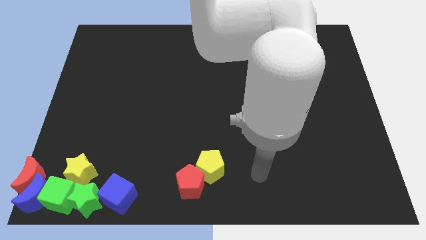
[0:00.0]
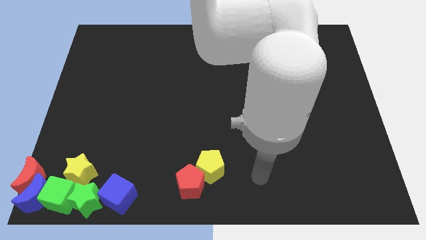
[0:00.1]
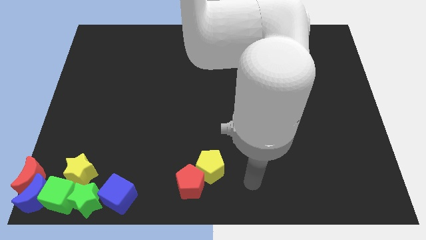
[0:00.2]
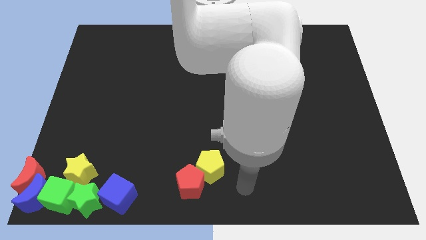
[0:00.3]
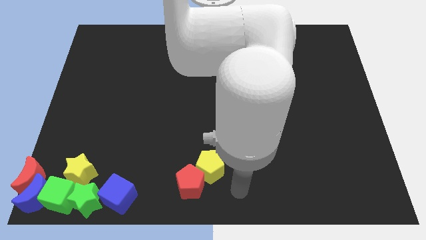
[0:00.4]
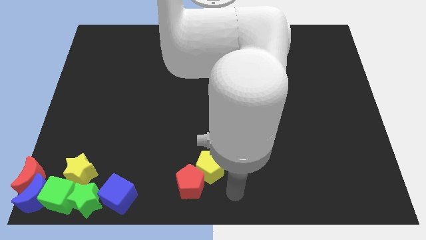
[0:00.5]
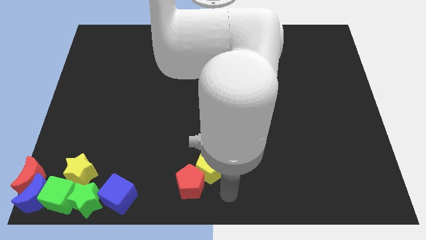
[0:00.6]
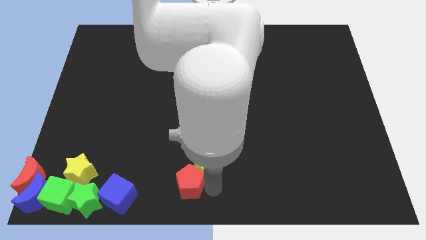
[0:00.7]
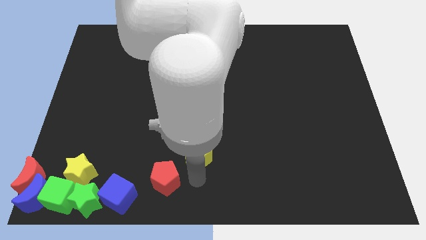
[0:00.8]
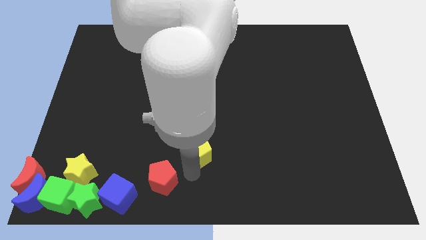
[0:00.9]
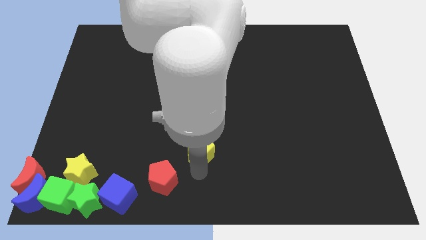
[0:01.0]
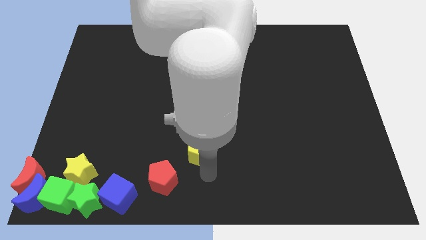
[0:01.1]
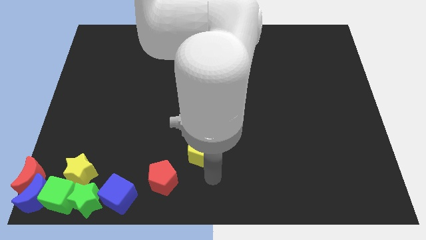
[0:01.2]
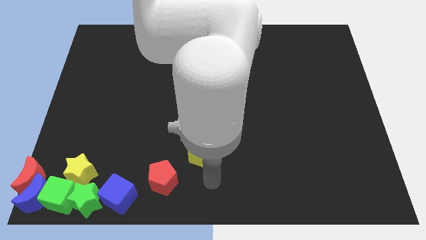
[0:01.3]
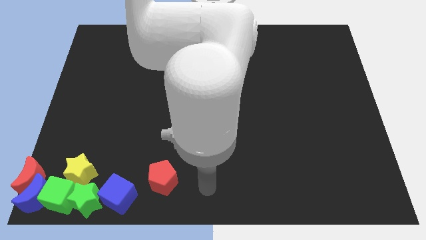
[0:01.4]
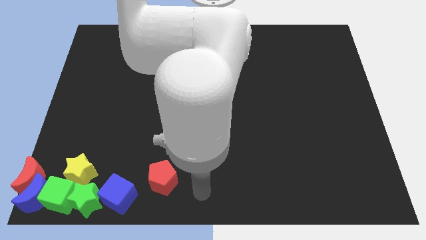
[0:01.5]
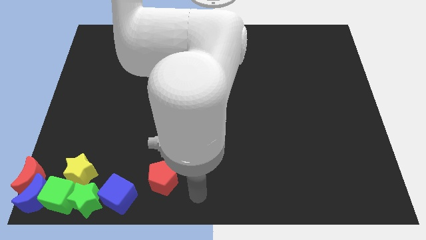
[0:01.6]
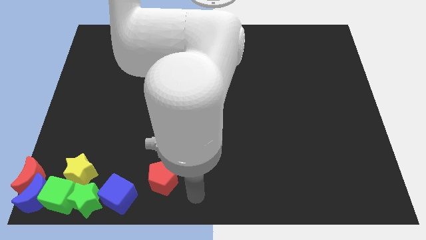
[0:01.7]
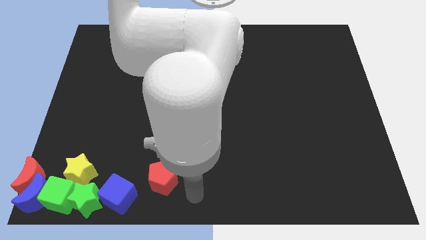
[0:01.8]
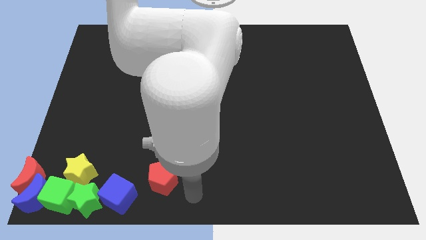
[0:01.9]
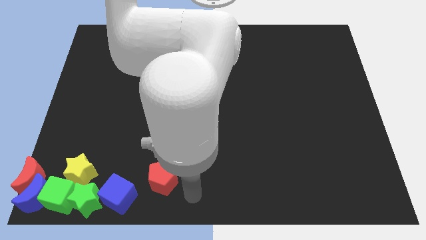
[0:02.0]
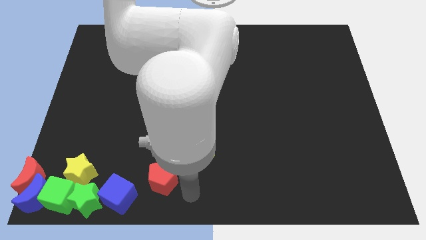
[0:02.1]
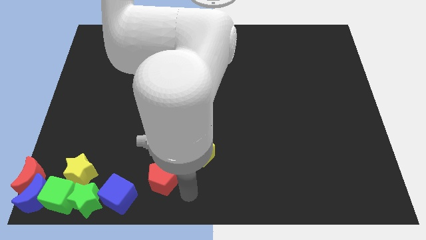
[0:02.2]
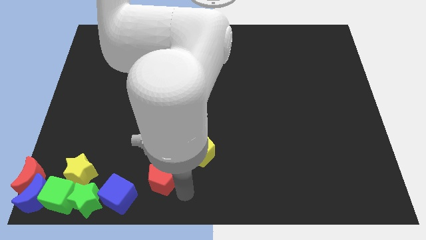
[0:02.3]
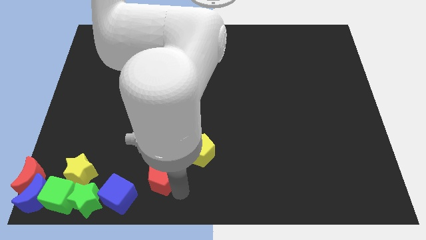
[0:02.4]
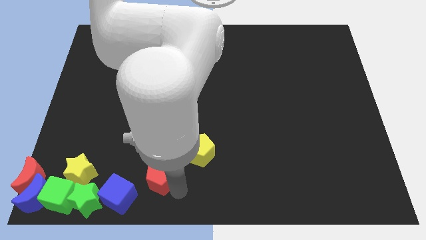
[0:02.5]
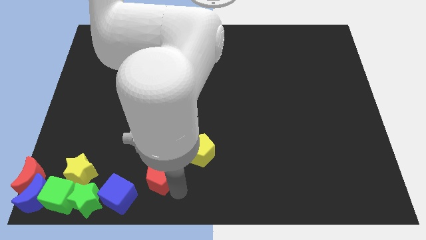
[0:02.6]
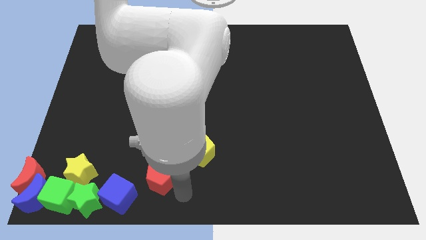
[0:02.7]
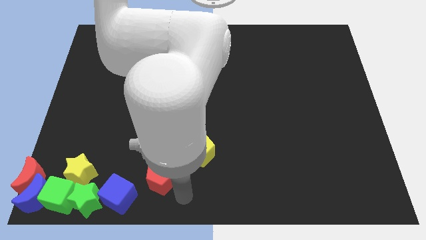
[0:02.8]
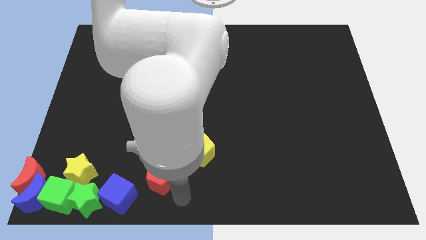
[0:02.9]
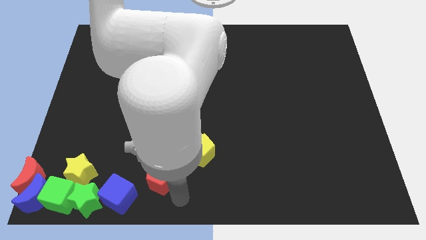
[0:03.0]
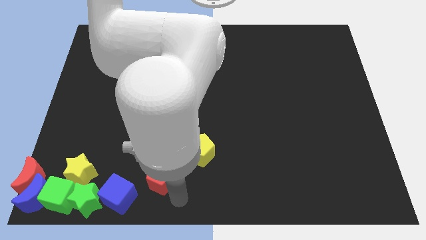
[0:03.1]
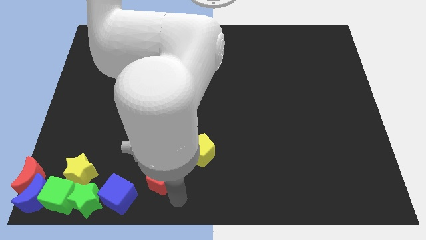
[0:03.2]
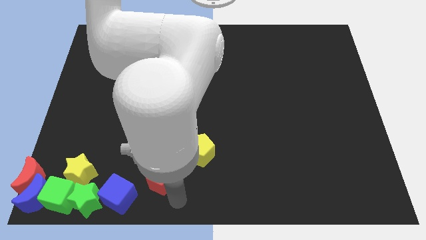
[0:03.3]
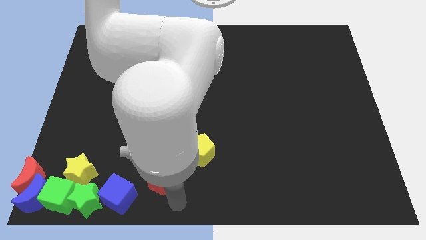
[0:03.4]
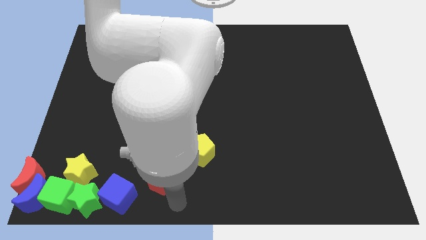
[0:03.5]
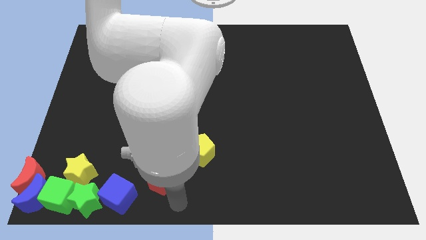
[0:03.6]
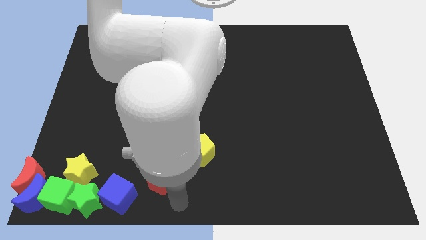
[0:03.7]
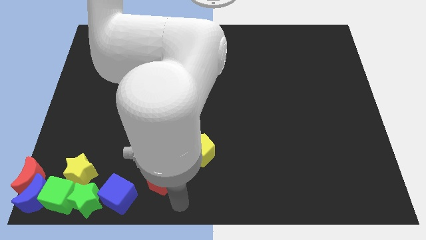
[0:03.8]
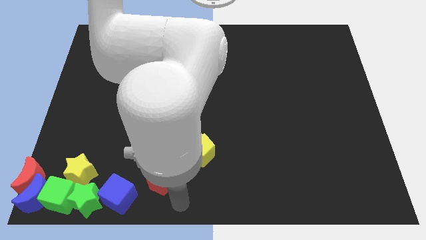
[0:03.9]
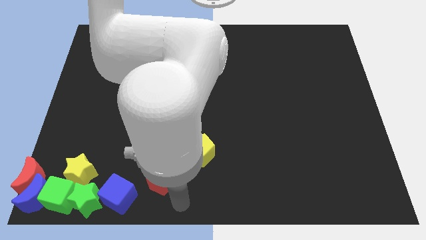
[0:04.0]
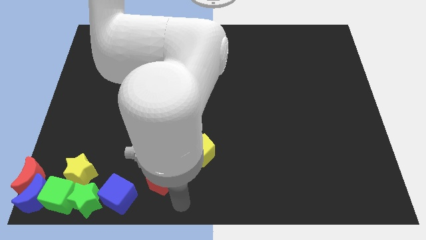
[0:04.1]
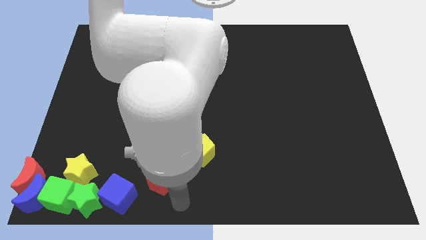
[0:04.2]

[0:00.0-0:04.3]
move the red pentagon between the yellow pentagon and blue cube

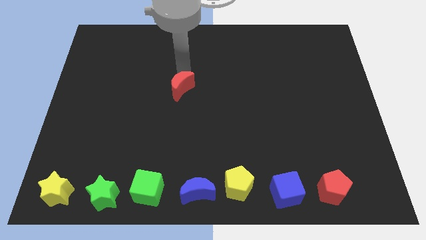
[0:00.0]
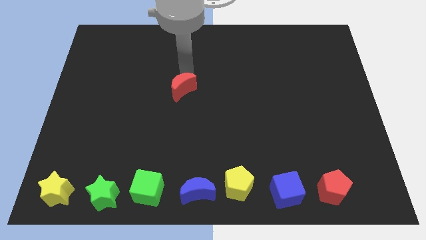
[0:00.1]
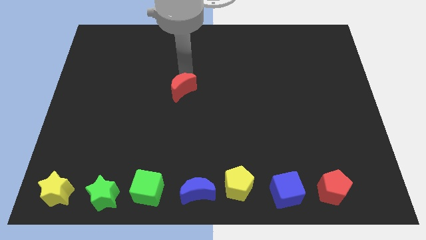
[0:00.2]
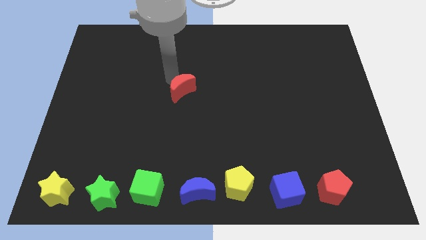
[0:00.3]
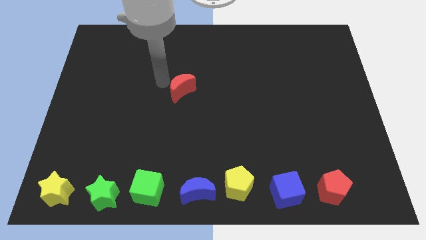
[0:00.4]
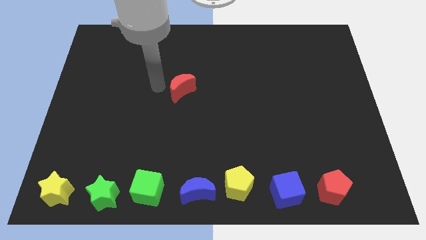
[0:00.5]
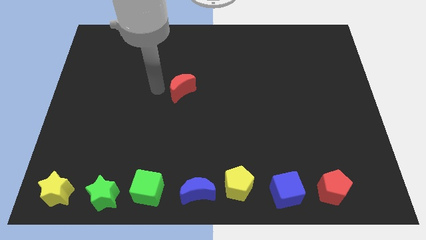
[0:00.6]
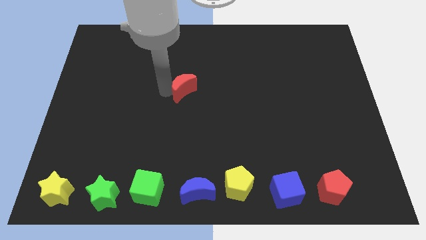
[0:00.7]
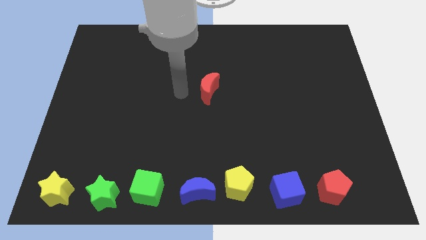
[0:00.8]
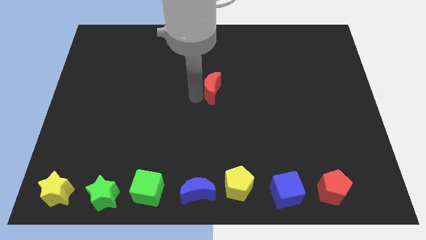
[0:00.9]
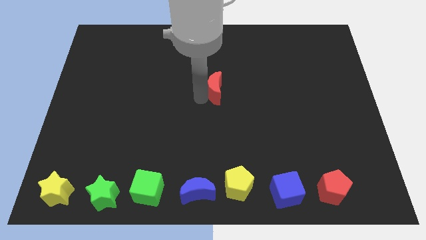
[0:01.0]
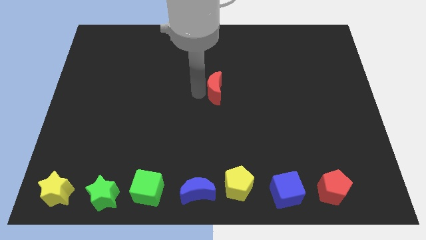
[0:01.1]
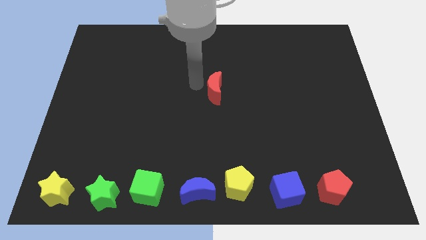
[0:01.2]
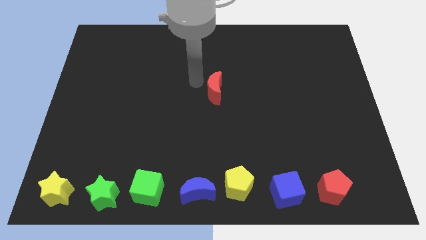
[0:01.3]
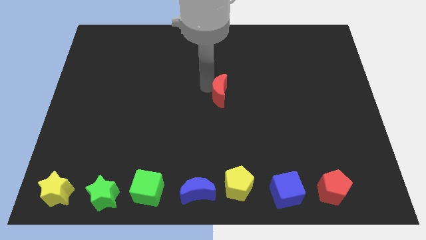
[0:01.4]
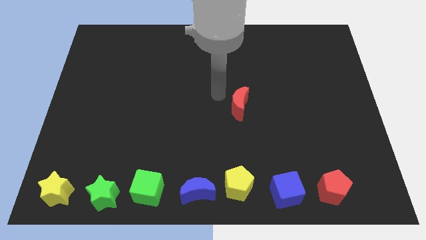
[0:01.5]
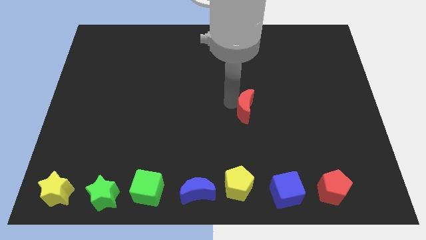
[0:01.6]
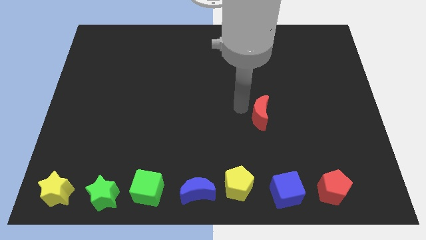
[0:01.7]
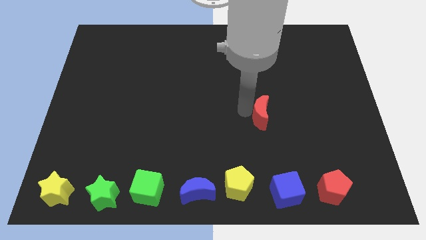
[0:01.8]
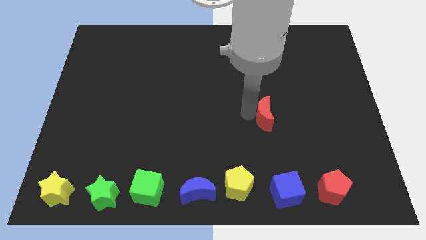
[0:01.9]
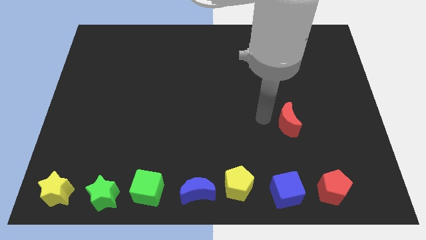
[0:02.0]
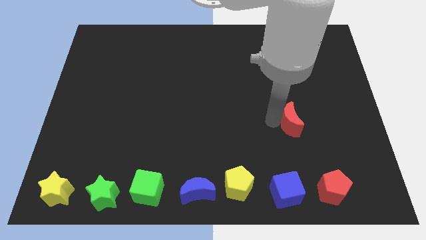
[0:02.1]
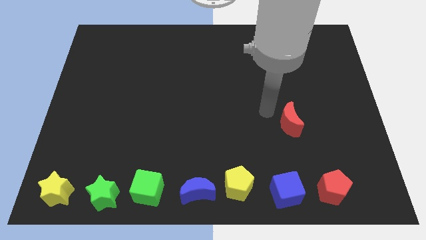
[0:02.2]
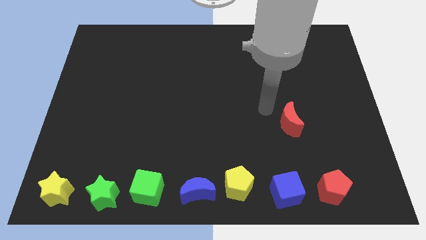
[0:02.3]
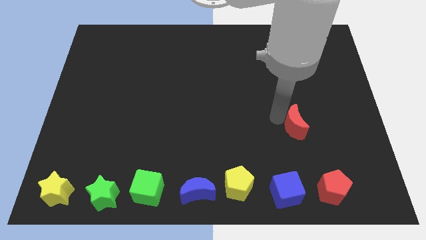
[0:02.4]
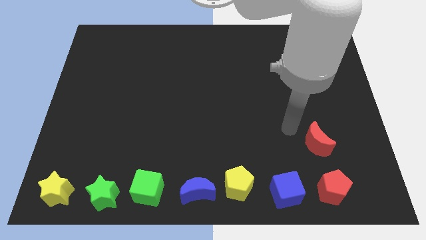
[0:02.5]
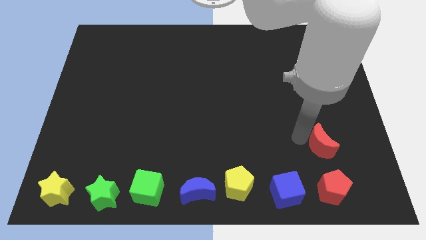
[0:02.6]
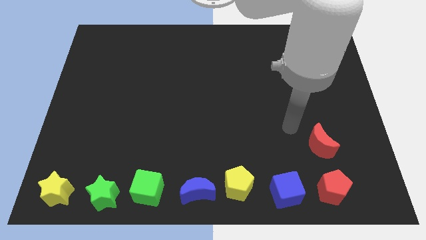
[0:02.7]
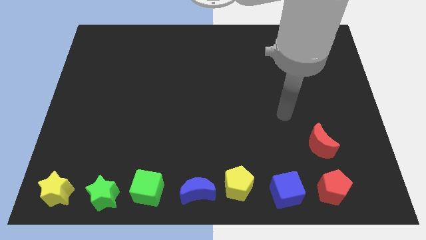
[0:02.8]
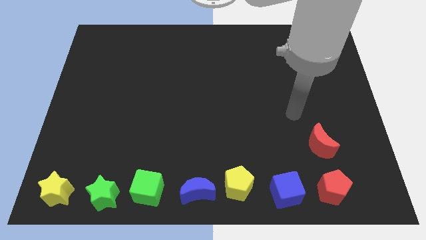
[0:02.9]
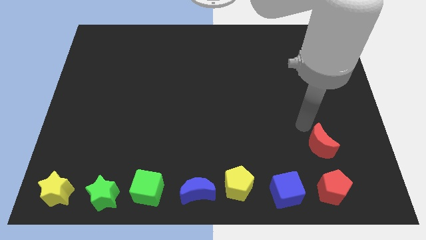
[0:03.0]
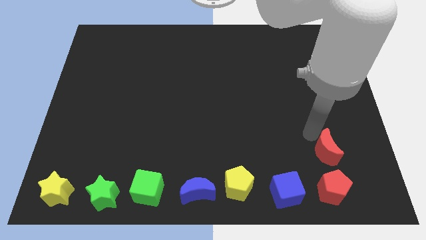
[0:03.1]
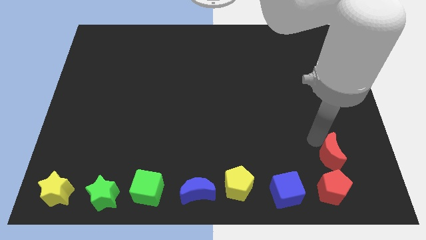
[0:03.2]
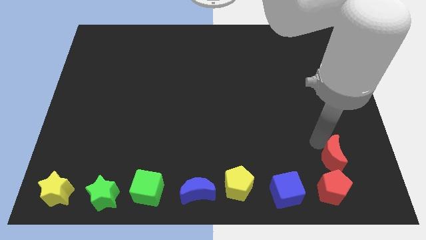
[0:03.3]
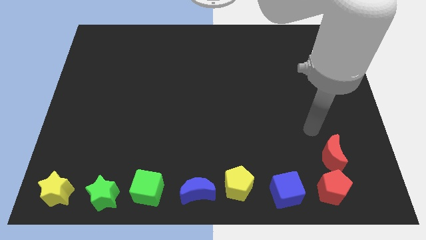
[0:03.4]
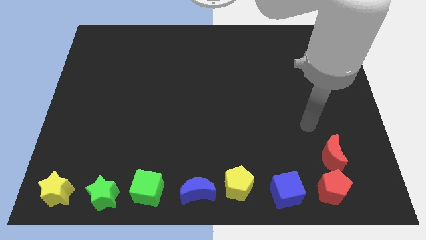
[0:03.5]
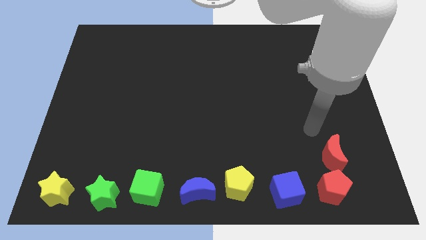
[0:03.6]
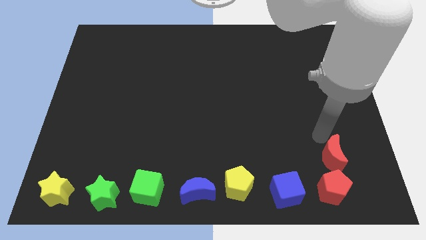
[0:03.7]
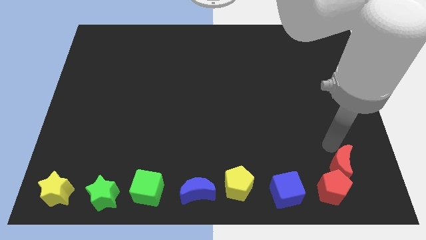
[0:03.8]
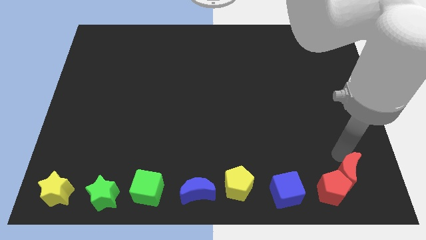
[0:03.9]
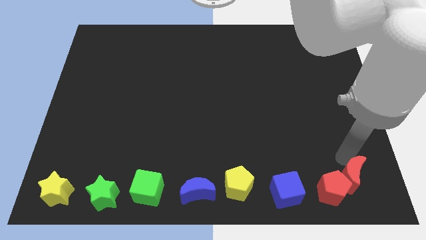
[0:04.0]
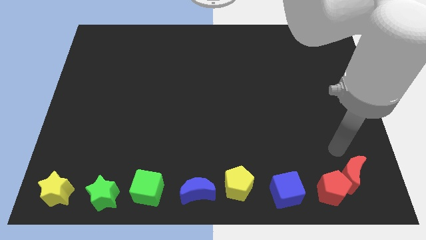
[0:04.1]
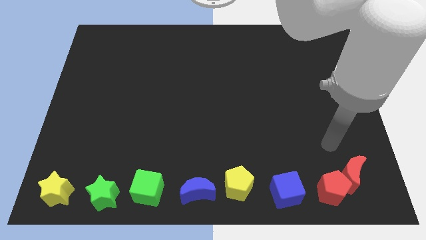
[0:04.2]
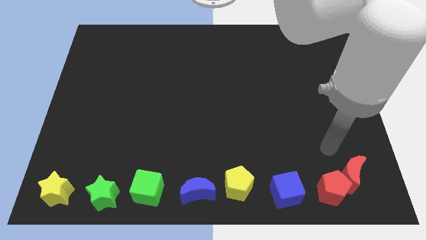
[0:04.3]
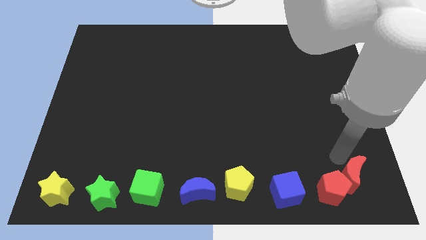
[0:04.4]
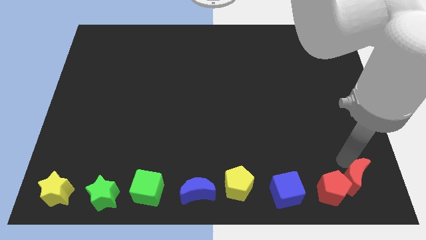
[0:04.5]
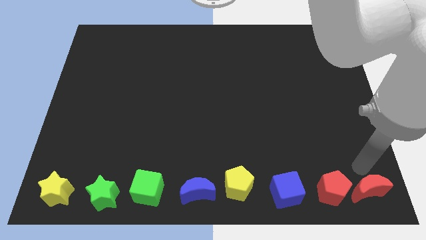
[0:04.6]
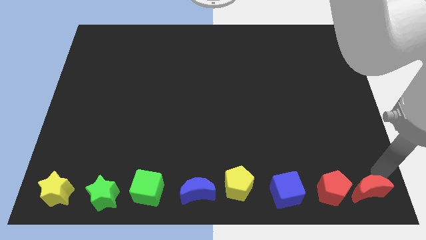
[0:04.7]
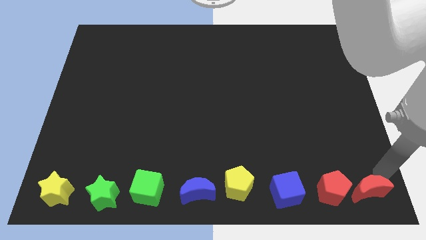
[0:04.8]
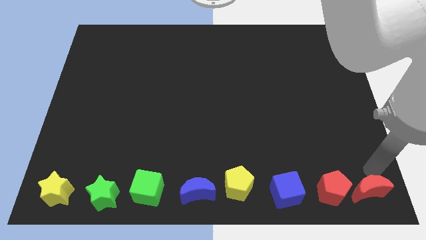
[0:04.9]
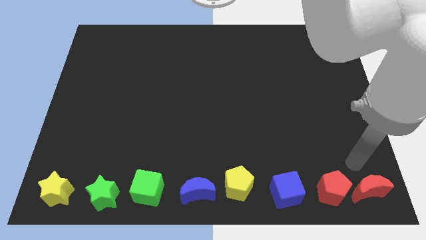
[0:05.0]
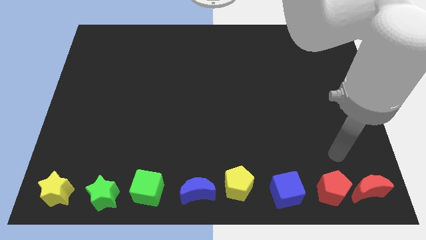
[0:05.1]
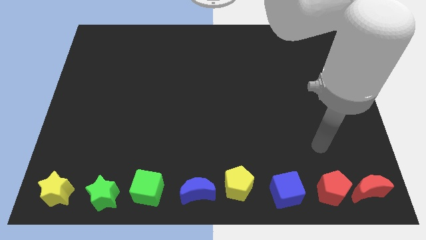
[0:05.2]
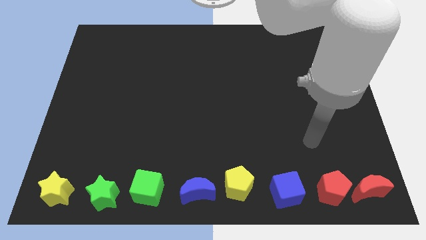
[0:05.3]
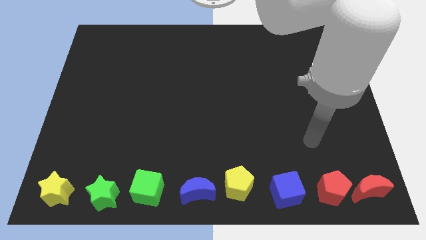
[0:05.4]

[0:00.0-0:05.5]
move red moon to bottom right corner
